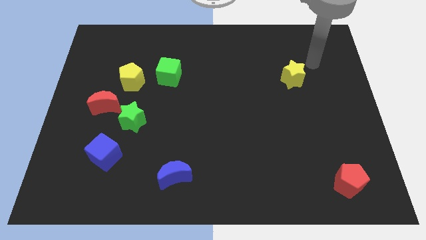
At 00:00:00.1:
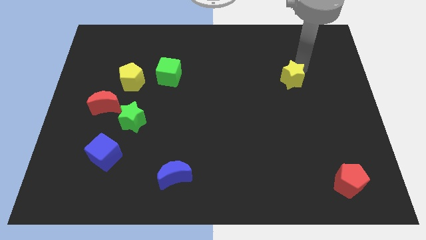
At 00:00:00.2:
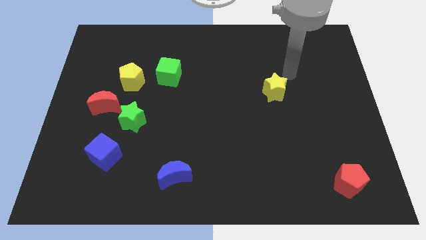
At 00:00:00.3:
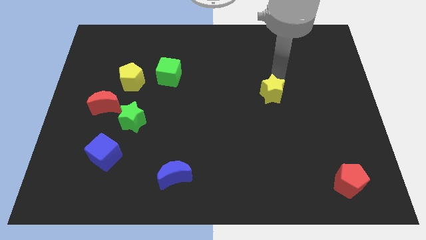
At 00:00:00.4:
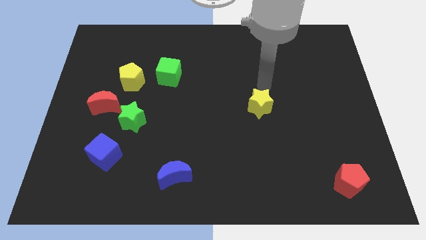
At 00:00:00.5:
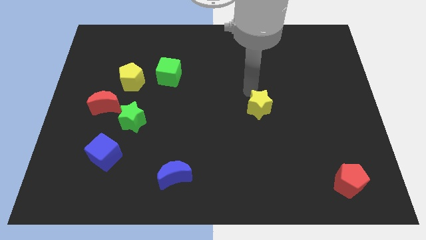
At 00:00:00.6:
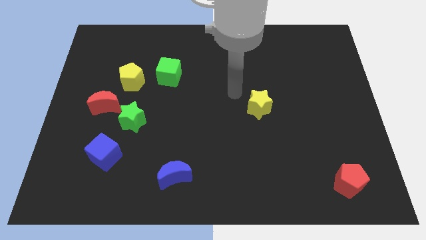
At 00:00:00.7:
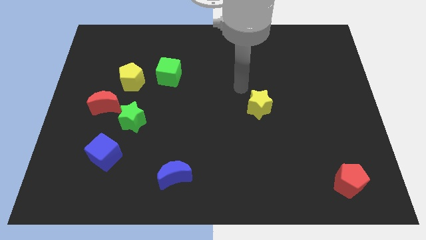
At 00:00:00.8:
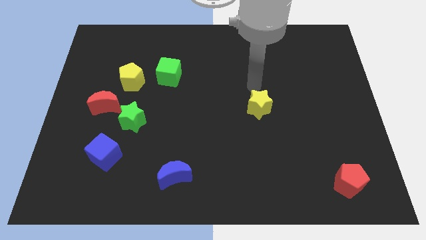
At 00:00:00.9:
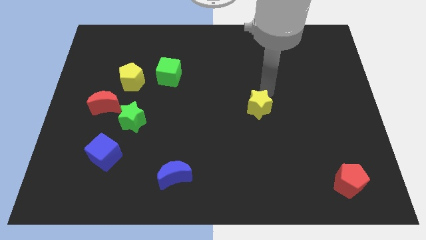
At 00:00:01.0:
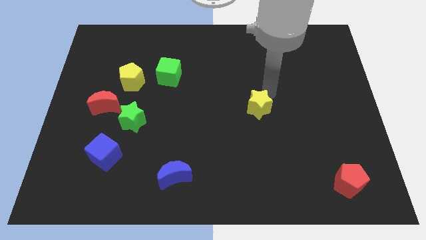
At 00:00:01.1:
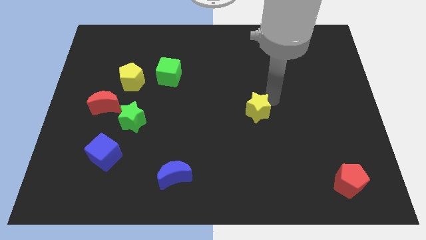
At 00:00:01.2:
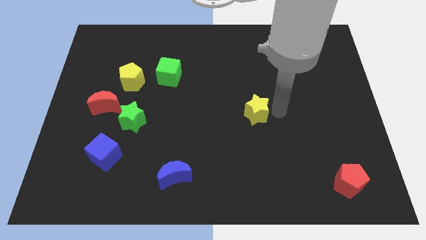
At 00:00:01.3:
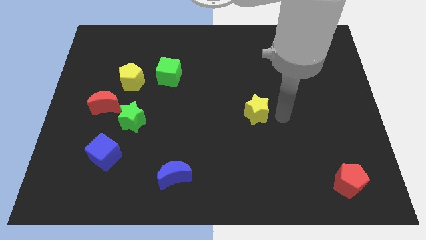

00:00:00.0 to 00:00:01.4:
slide the yellow star diagonally on the top left side of the red pentagon

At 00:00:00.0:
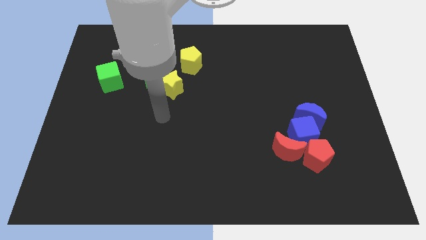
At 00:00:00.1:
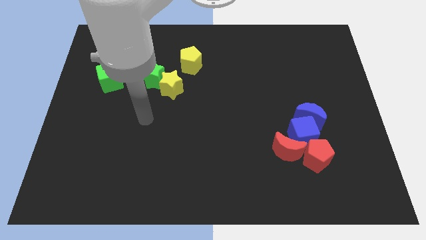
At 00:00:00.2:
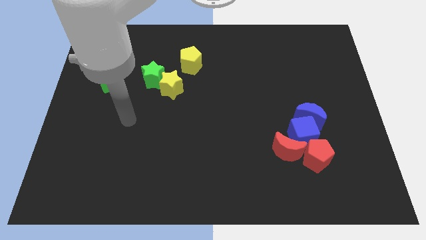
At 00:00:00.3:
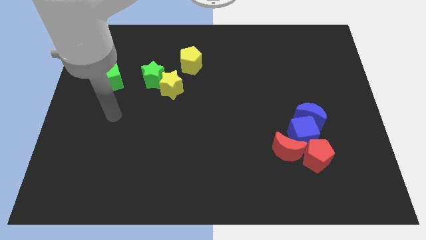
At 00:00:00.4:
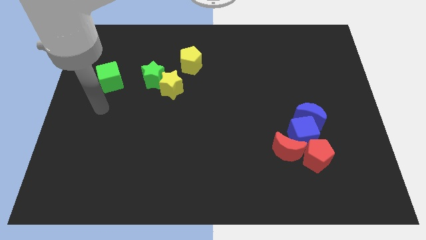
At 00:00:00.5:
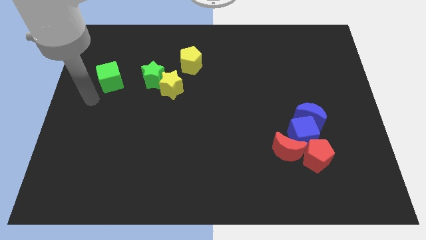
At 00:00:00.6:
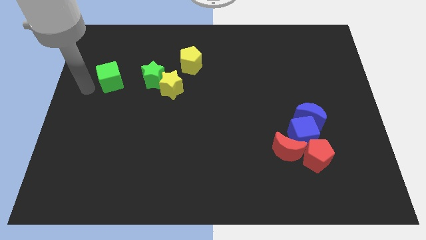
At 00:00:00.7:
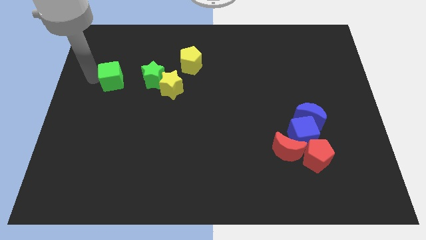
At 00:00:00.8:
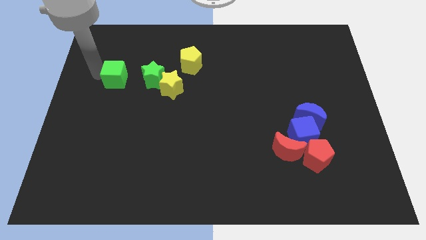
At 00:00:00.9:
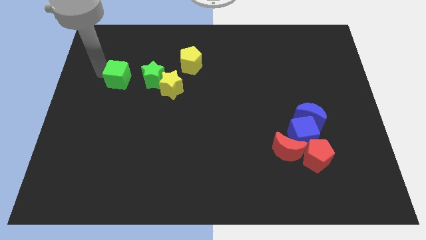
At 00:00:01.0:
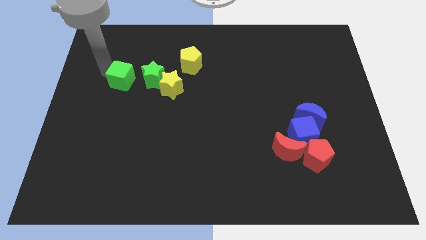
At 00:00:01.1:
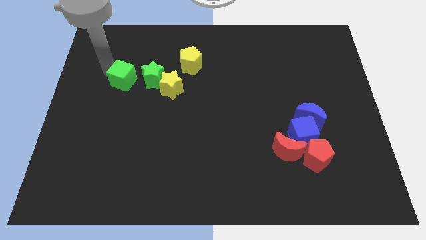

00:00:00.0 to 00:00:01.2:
move the green cube to the left of the green star

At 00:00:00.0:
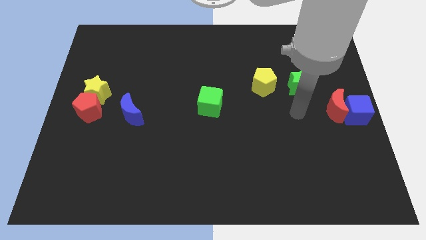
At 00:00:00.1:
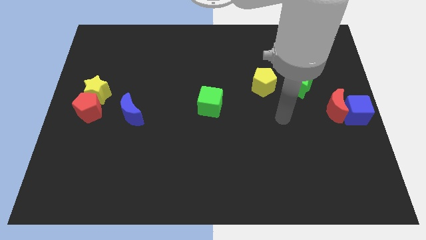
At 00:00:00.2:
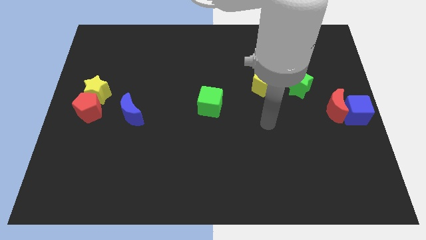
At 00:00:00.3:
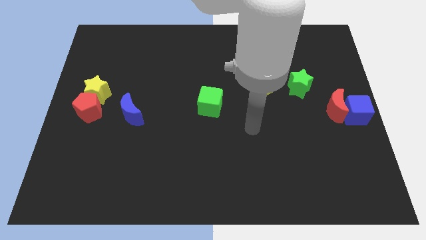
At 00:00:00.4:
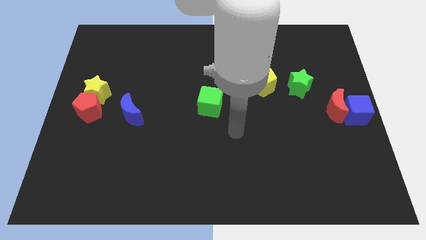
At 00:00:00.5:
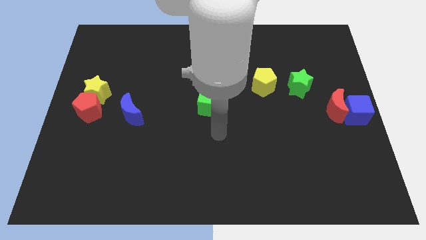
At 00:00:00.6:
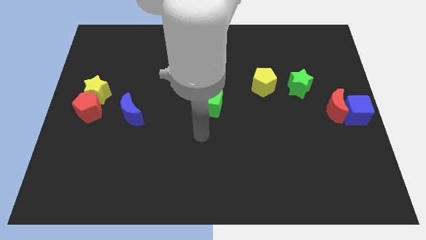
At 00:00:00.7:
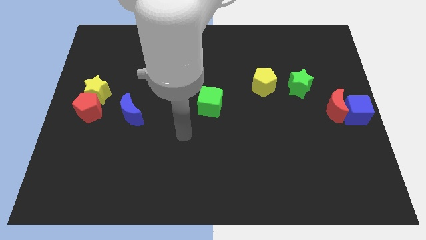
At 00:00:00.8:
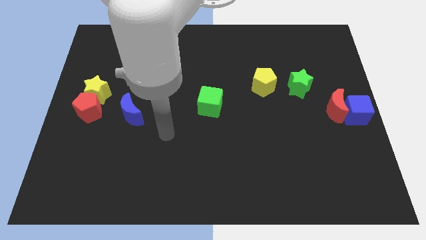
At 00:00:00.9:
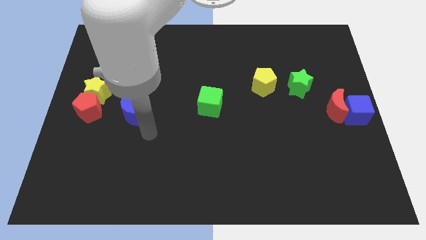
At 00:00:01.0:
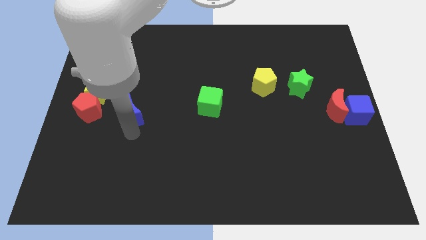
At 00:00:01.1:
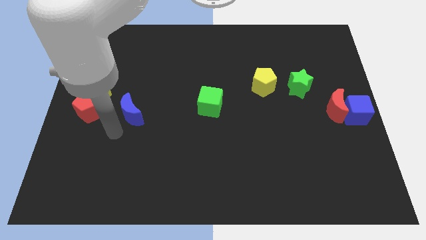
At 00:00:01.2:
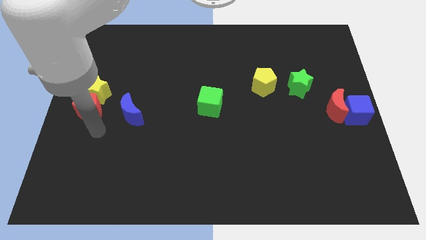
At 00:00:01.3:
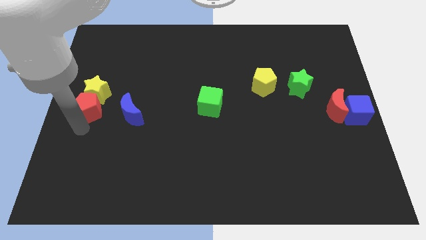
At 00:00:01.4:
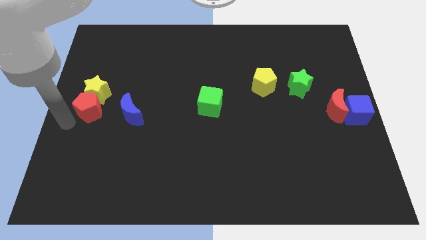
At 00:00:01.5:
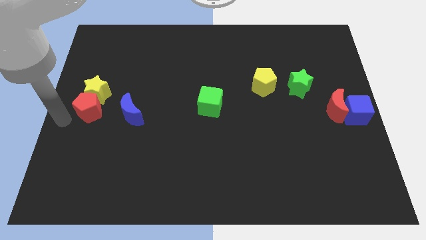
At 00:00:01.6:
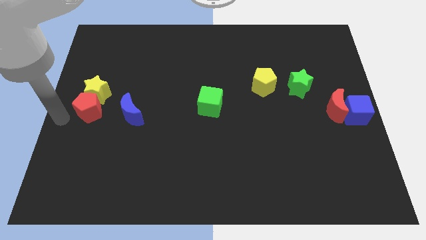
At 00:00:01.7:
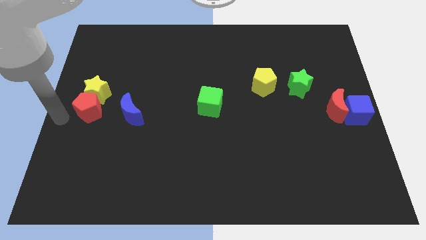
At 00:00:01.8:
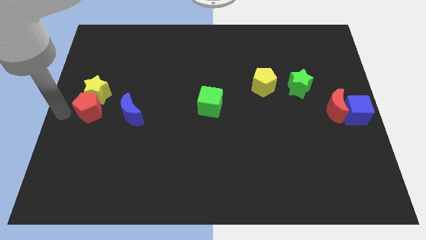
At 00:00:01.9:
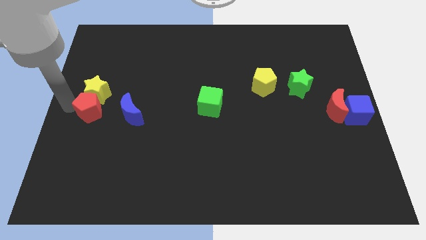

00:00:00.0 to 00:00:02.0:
place your arm to the left of red pentagon

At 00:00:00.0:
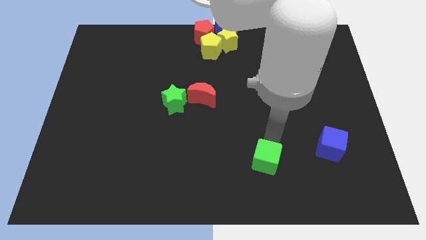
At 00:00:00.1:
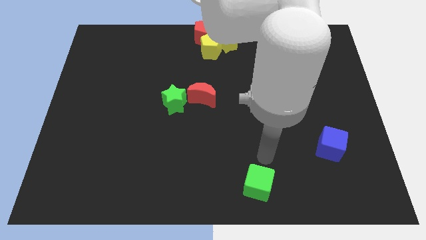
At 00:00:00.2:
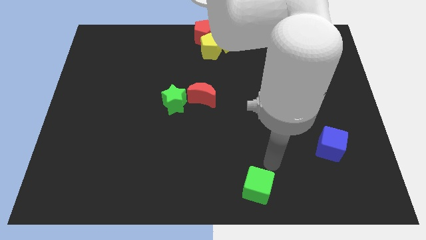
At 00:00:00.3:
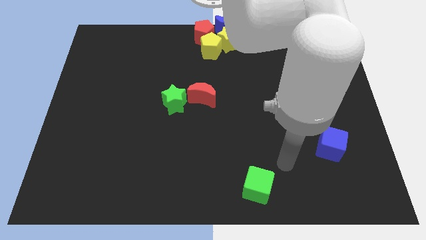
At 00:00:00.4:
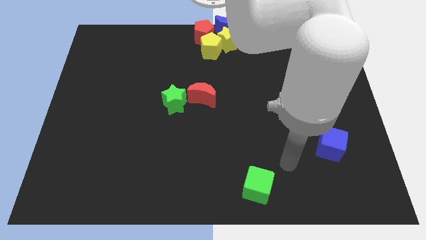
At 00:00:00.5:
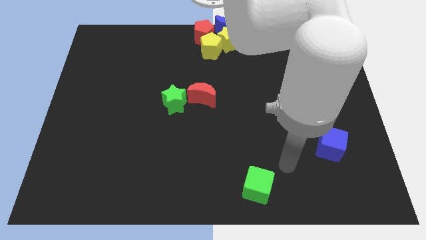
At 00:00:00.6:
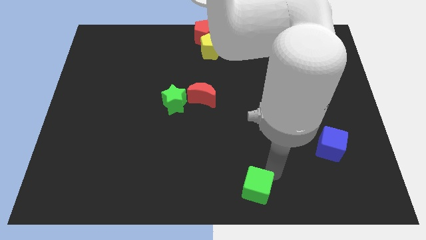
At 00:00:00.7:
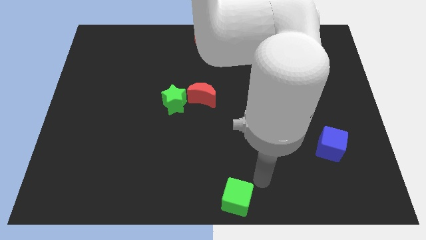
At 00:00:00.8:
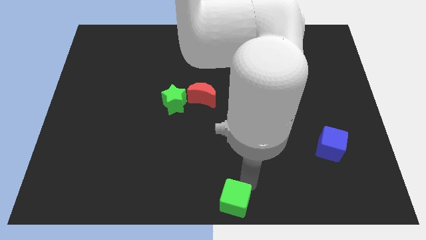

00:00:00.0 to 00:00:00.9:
push the green block to the bottom center of the board

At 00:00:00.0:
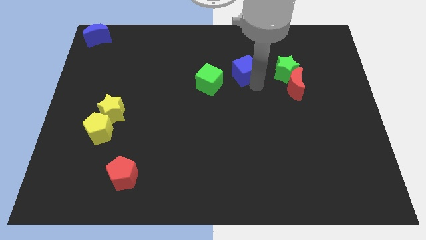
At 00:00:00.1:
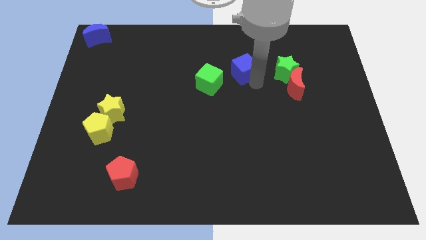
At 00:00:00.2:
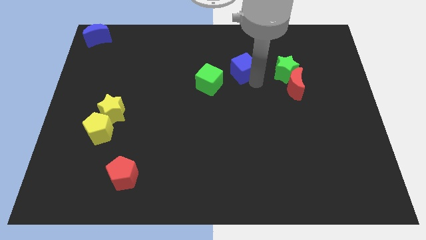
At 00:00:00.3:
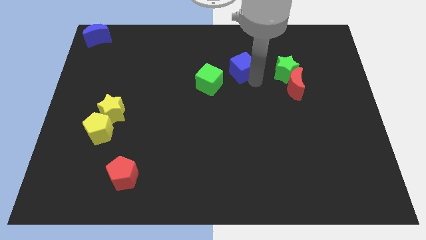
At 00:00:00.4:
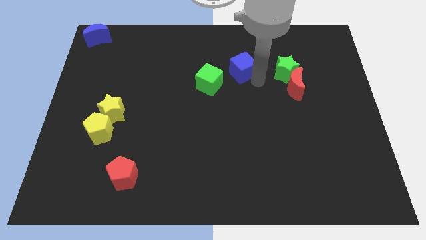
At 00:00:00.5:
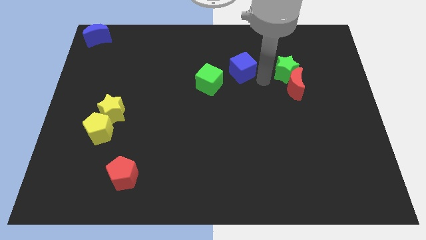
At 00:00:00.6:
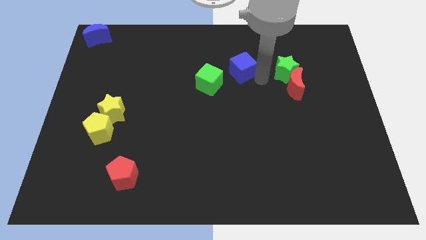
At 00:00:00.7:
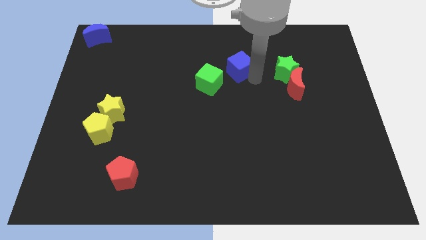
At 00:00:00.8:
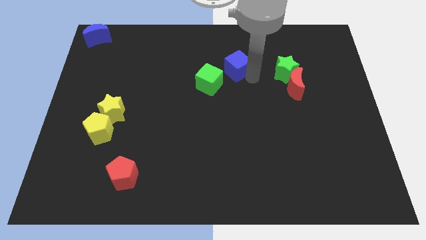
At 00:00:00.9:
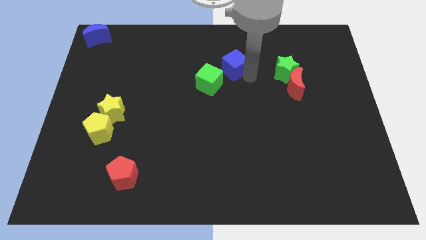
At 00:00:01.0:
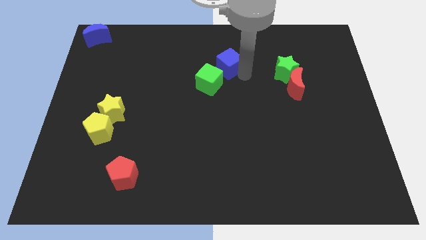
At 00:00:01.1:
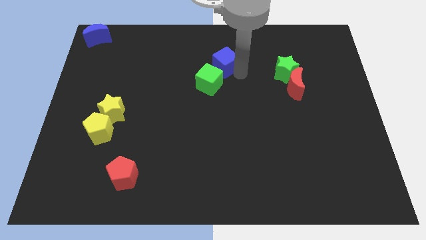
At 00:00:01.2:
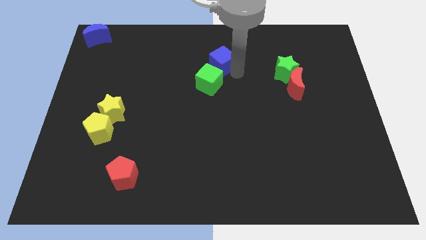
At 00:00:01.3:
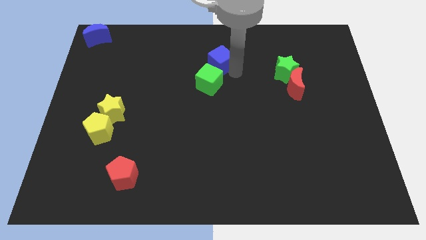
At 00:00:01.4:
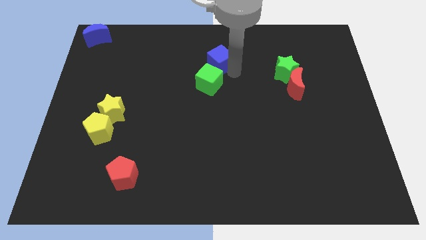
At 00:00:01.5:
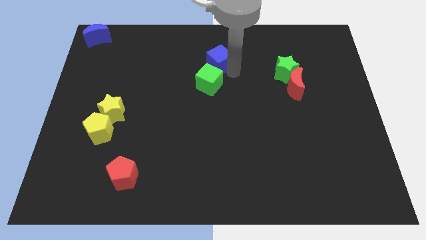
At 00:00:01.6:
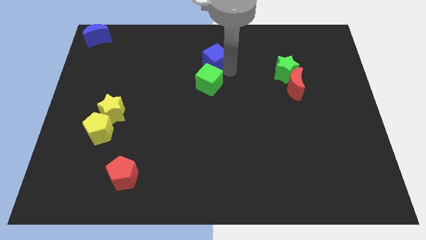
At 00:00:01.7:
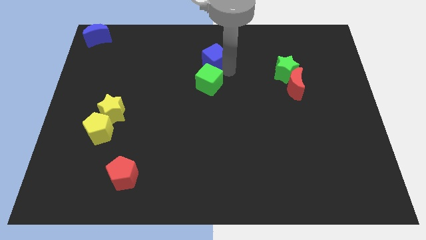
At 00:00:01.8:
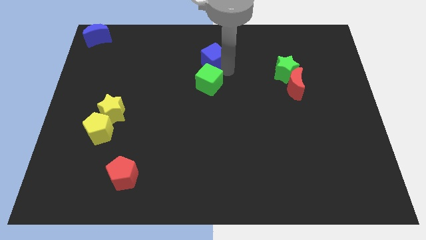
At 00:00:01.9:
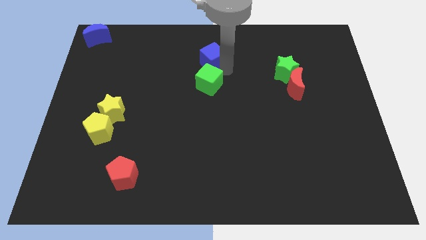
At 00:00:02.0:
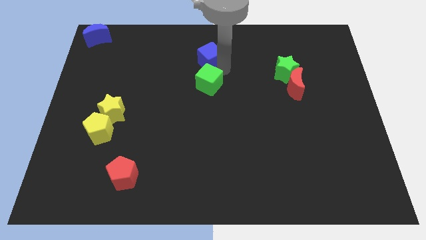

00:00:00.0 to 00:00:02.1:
put the blue cube on the top side of the green cube

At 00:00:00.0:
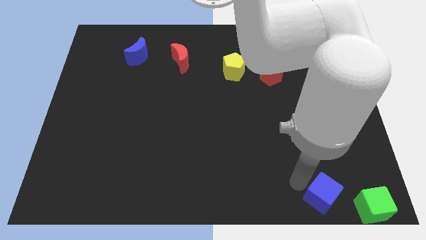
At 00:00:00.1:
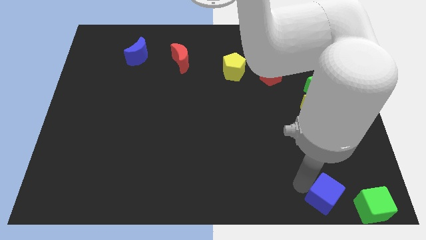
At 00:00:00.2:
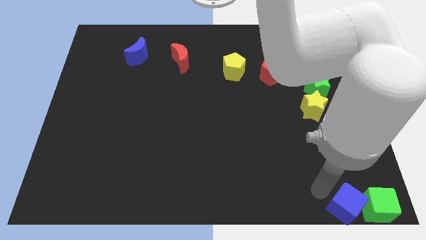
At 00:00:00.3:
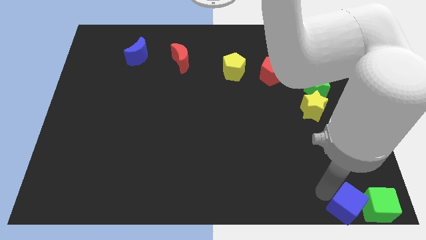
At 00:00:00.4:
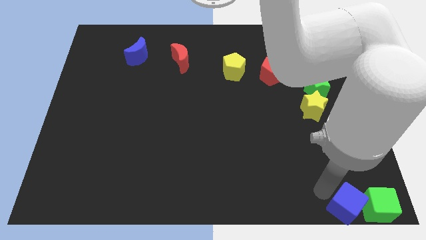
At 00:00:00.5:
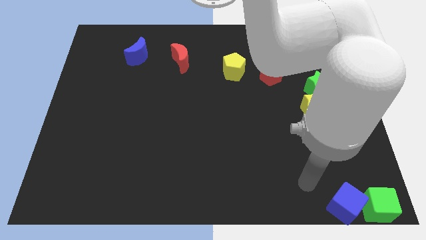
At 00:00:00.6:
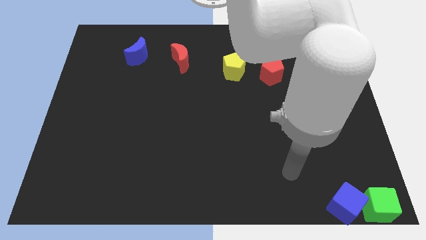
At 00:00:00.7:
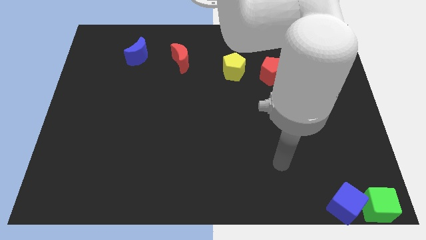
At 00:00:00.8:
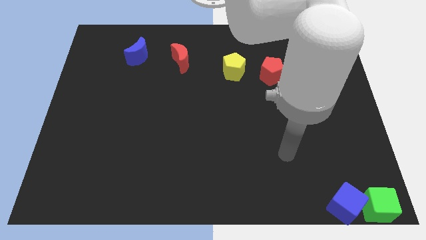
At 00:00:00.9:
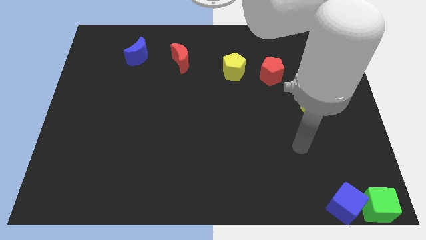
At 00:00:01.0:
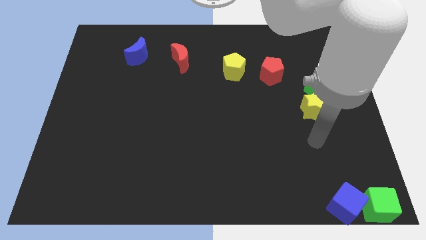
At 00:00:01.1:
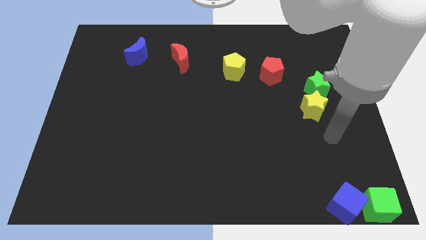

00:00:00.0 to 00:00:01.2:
push the blue cube into the green cube

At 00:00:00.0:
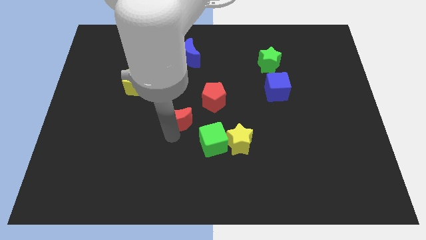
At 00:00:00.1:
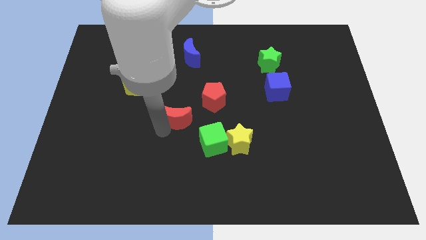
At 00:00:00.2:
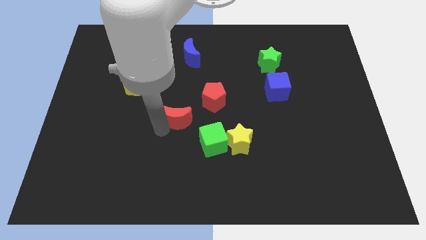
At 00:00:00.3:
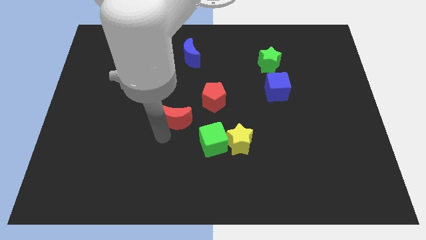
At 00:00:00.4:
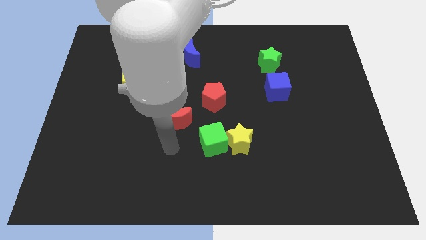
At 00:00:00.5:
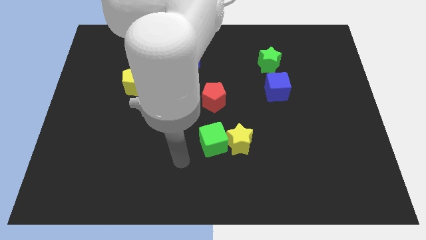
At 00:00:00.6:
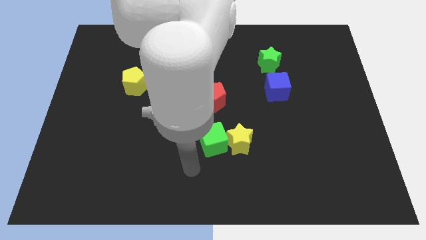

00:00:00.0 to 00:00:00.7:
move the arm towards the red crescent
